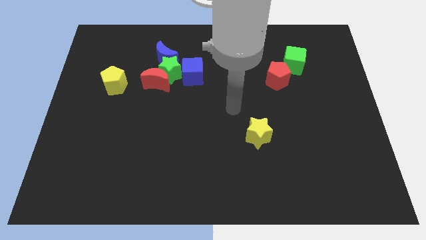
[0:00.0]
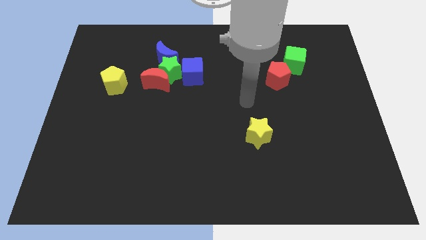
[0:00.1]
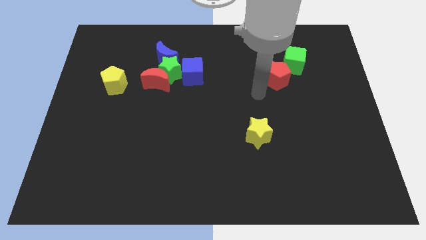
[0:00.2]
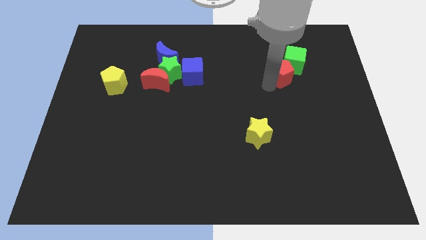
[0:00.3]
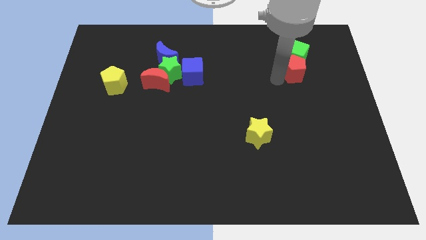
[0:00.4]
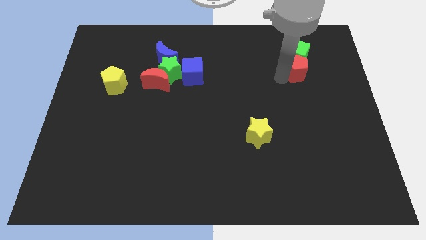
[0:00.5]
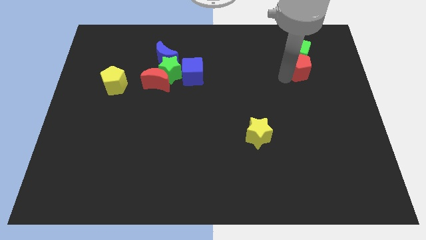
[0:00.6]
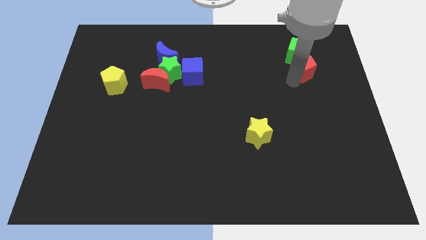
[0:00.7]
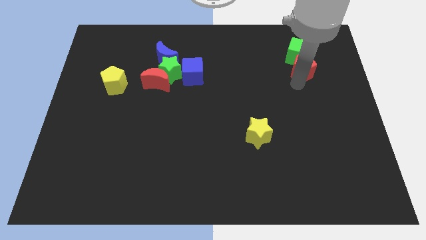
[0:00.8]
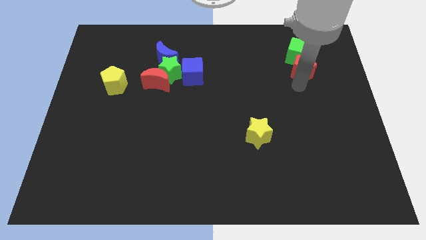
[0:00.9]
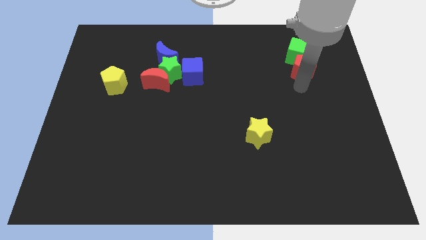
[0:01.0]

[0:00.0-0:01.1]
push the red pentagon into the green cube

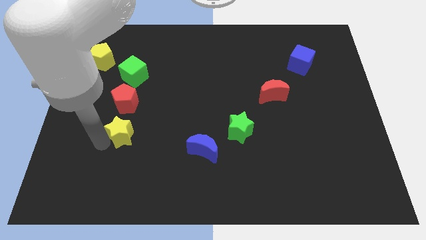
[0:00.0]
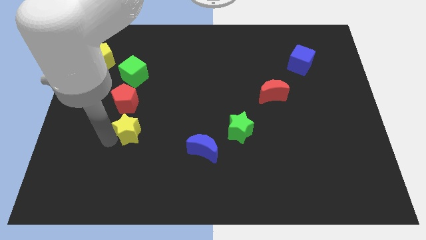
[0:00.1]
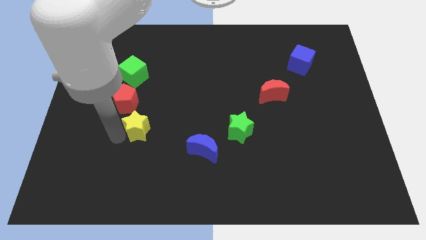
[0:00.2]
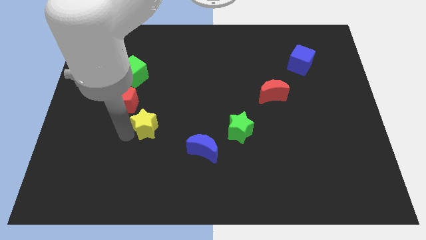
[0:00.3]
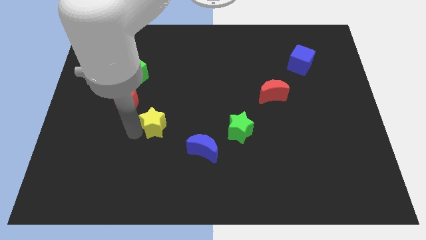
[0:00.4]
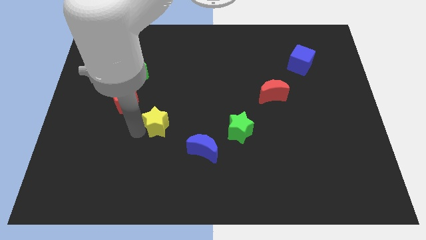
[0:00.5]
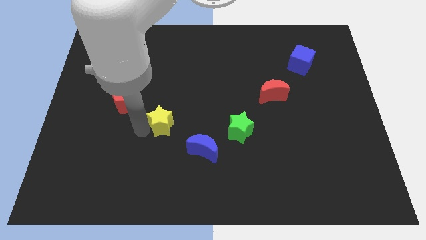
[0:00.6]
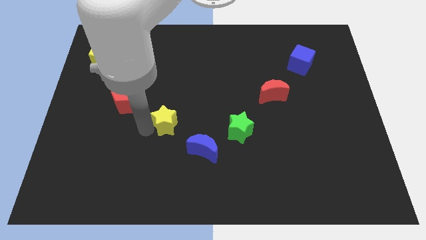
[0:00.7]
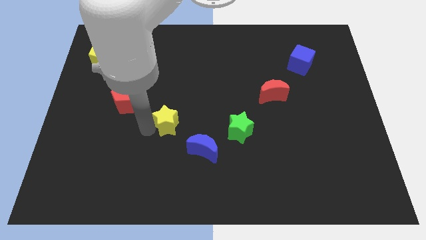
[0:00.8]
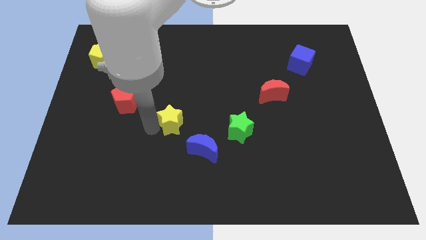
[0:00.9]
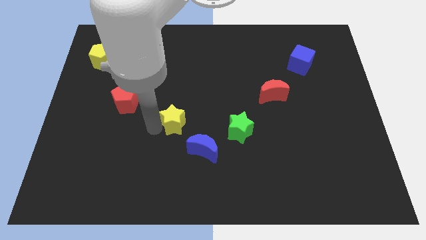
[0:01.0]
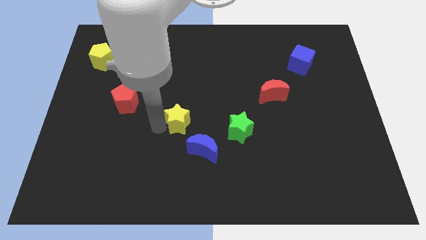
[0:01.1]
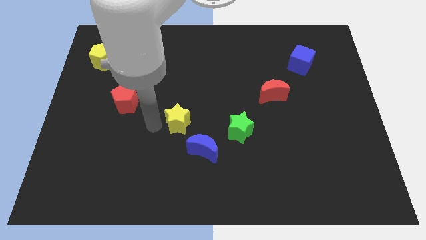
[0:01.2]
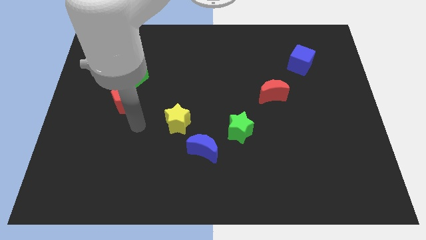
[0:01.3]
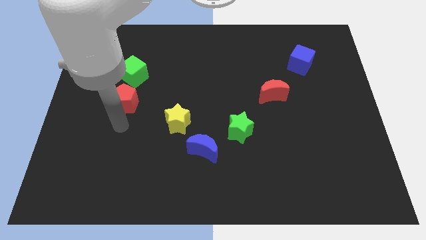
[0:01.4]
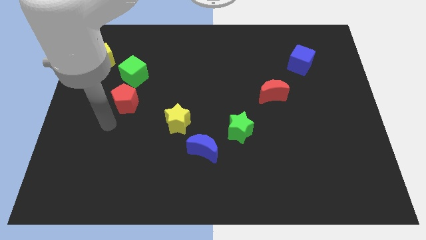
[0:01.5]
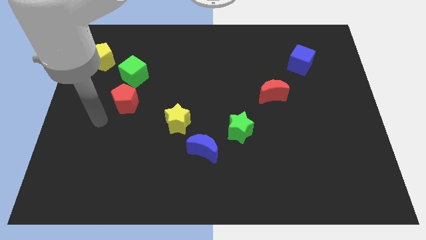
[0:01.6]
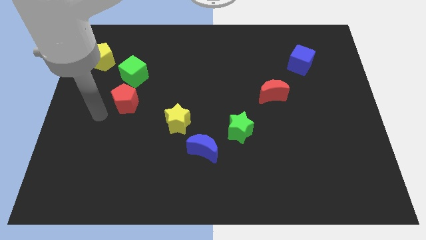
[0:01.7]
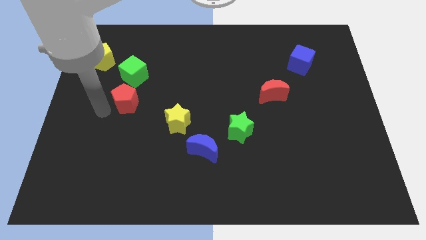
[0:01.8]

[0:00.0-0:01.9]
move yellow star upwards

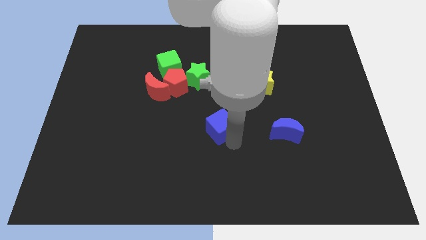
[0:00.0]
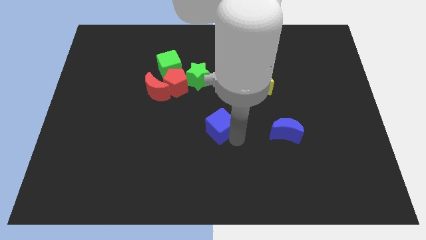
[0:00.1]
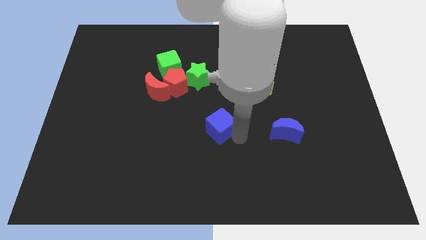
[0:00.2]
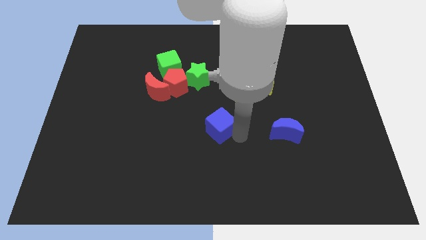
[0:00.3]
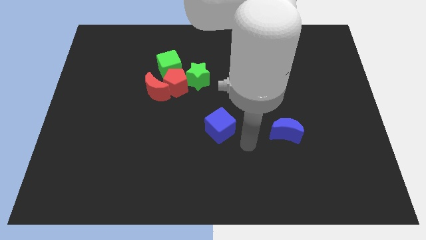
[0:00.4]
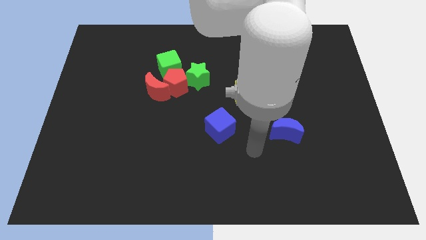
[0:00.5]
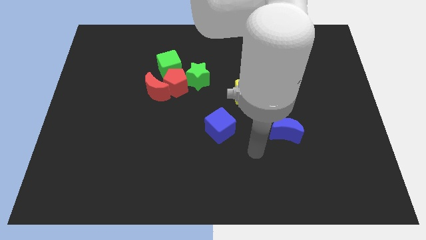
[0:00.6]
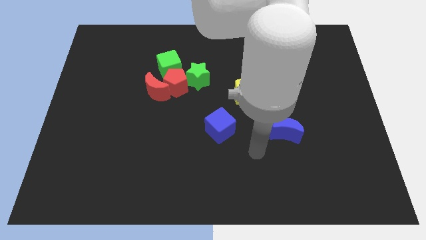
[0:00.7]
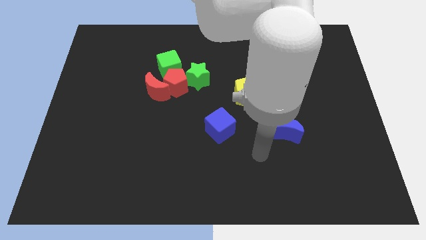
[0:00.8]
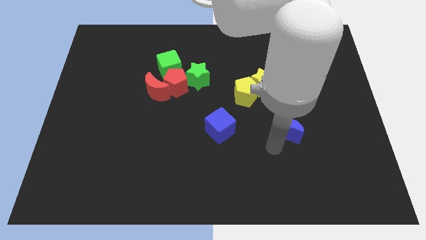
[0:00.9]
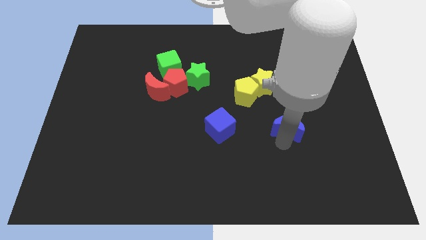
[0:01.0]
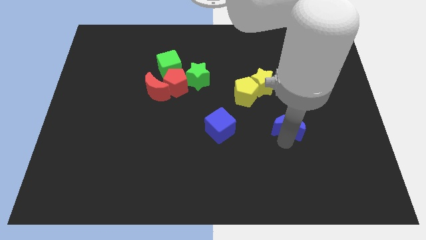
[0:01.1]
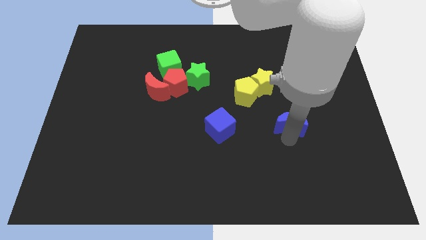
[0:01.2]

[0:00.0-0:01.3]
place your arm below blue moon

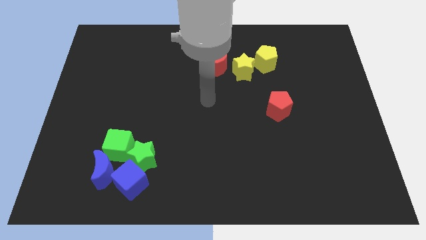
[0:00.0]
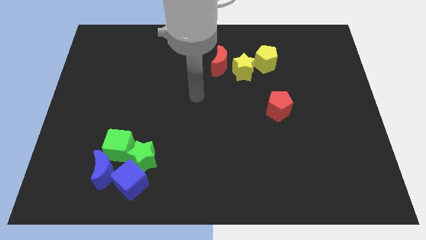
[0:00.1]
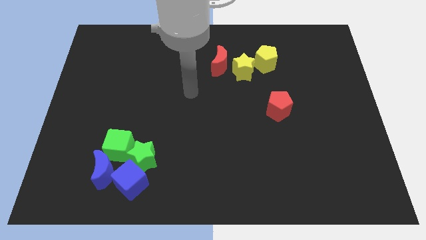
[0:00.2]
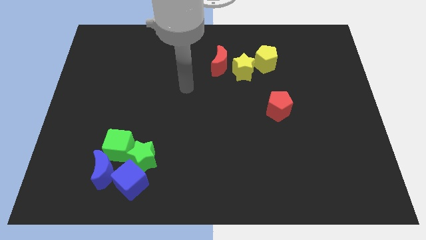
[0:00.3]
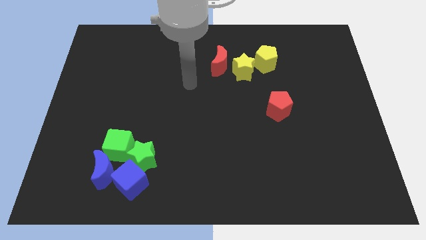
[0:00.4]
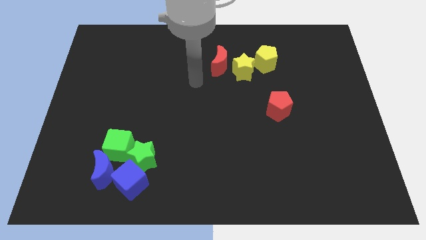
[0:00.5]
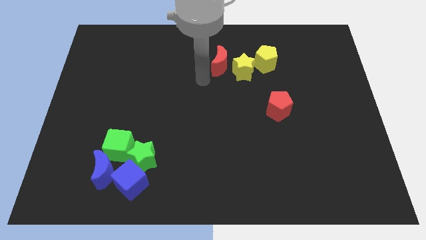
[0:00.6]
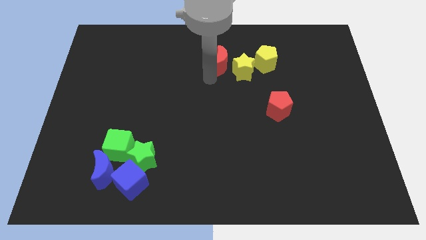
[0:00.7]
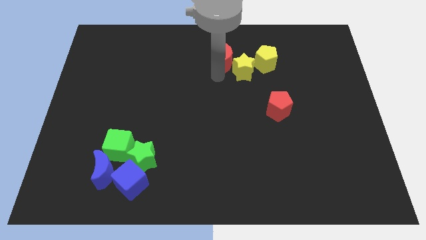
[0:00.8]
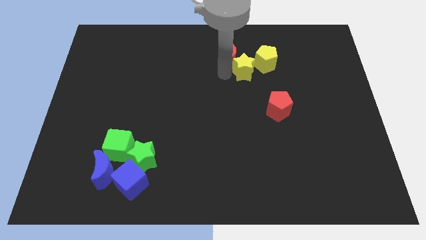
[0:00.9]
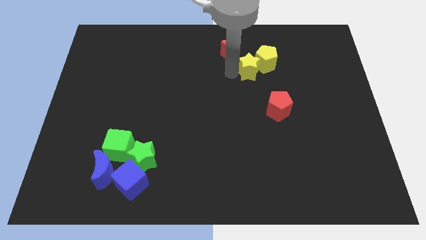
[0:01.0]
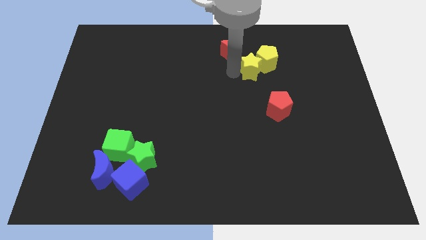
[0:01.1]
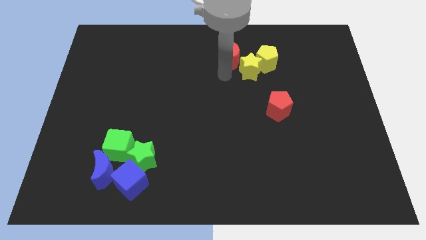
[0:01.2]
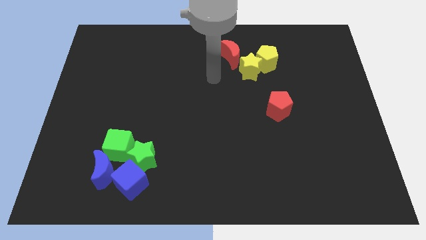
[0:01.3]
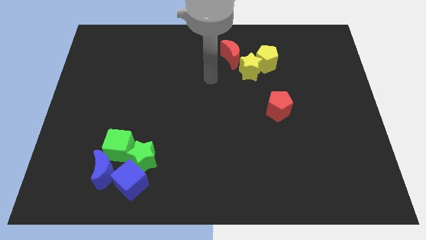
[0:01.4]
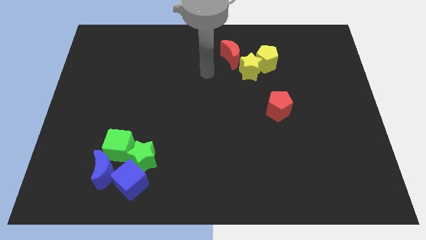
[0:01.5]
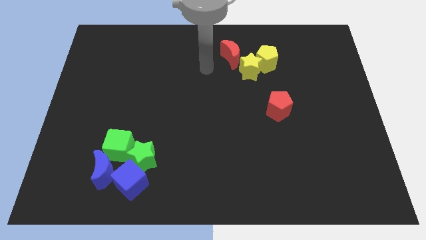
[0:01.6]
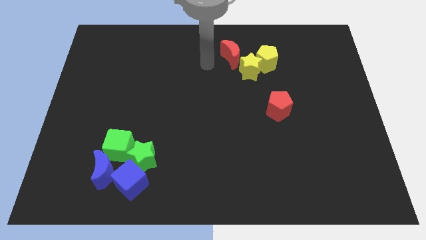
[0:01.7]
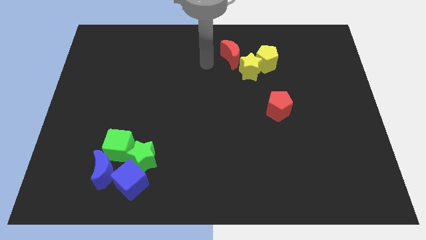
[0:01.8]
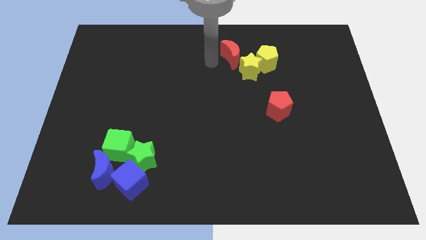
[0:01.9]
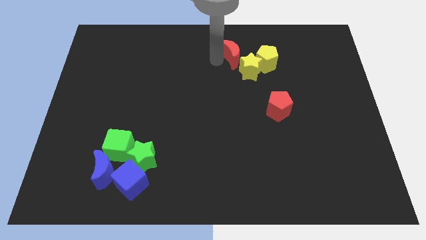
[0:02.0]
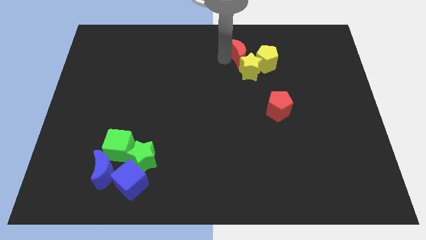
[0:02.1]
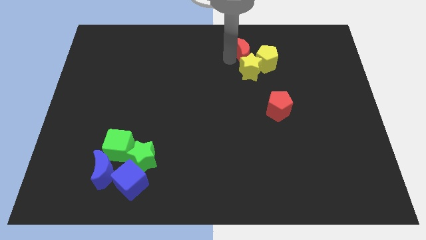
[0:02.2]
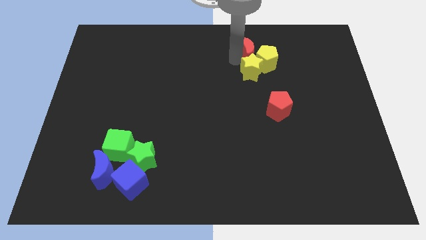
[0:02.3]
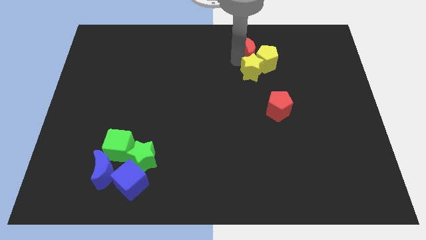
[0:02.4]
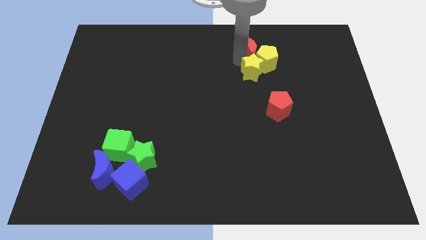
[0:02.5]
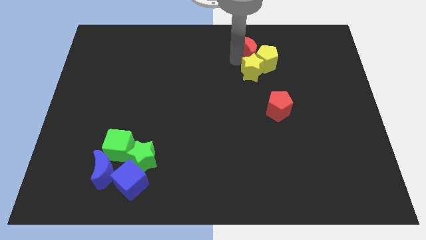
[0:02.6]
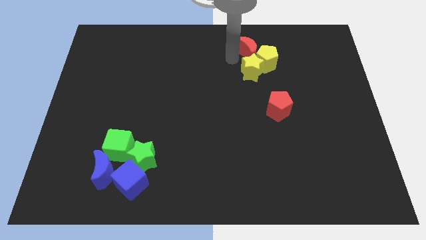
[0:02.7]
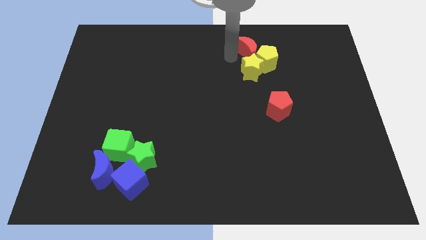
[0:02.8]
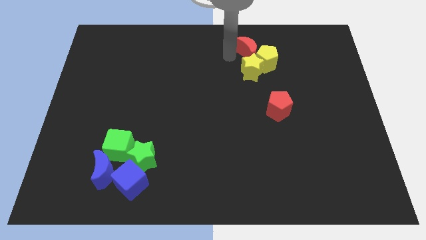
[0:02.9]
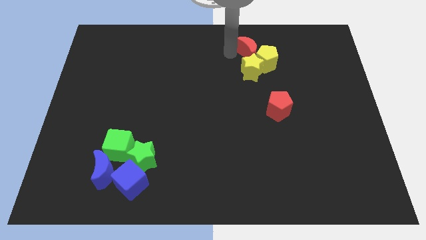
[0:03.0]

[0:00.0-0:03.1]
push red crescent into yellow star and yellow pentagon

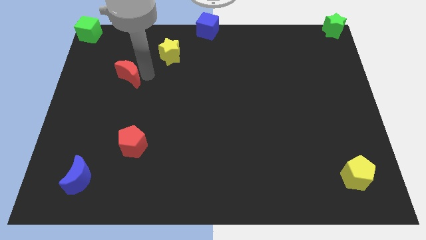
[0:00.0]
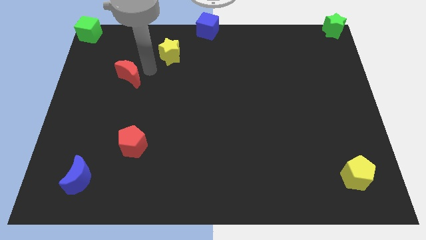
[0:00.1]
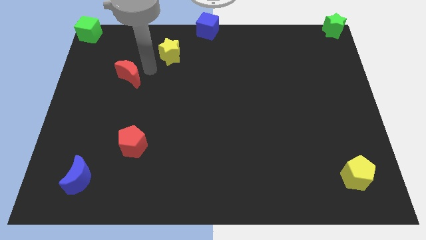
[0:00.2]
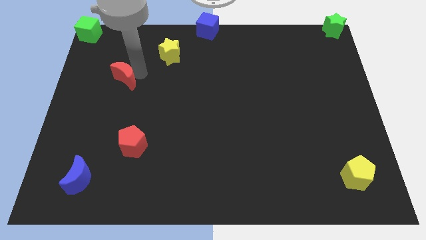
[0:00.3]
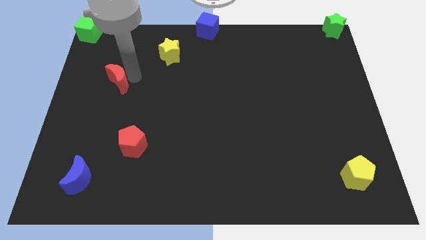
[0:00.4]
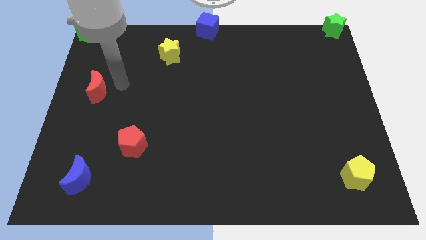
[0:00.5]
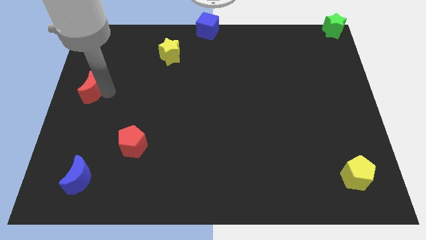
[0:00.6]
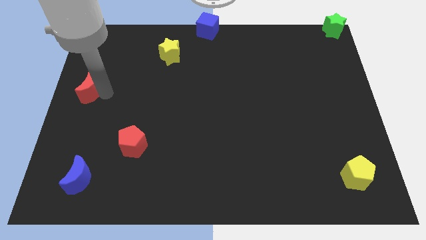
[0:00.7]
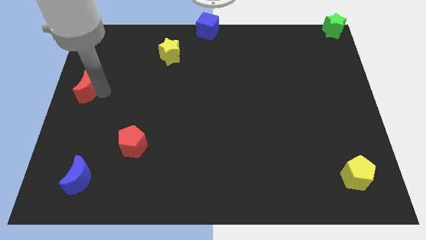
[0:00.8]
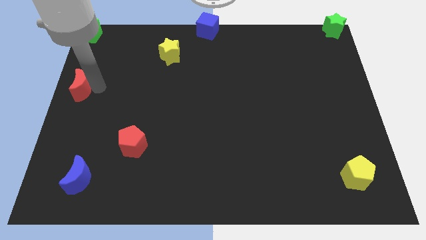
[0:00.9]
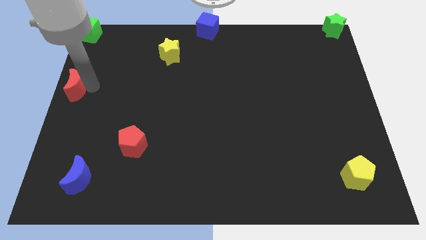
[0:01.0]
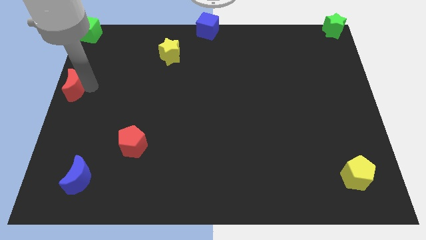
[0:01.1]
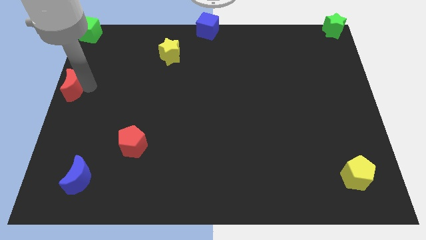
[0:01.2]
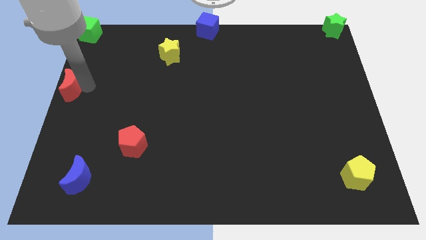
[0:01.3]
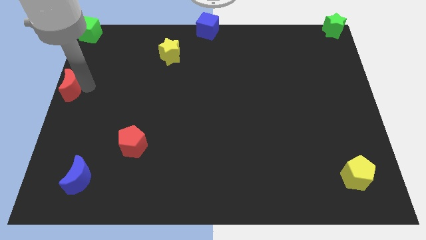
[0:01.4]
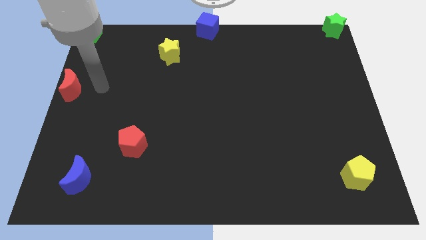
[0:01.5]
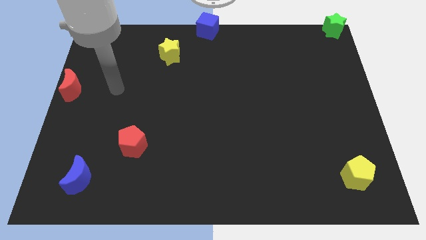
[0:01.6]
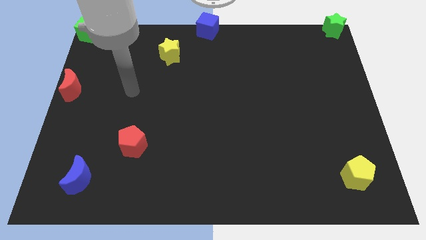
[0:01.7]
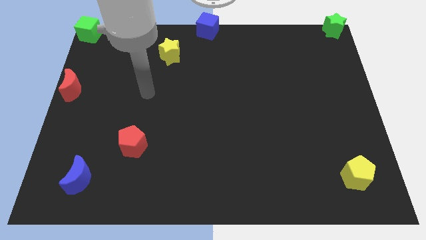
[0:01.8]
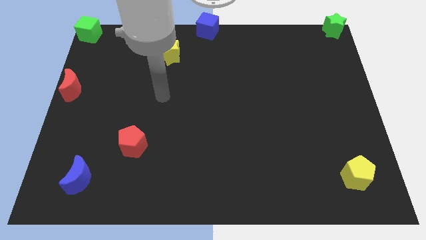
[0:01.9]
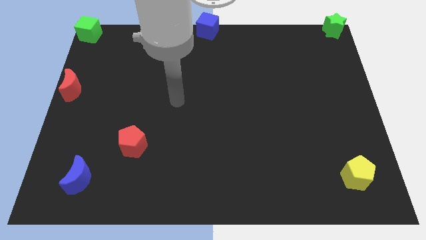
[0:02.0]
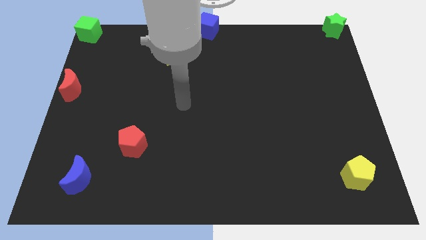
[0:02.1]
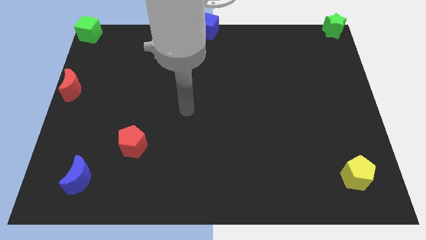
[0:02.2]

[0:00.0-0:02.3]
place the red crescent at the left center of the board
